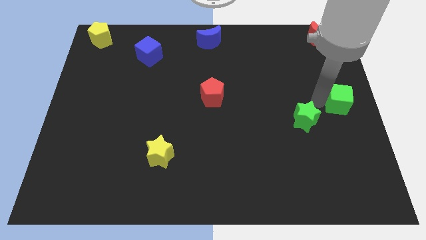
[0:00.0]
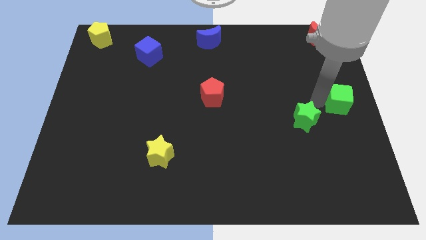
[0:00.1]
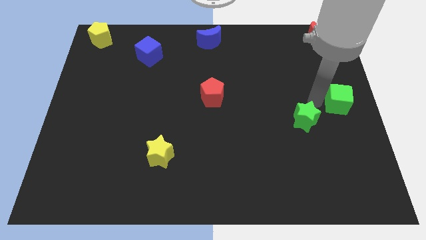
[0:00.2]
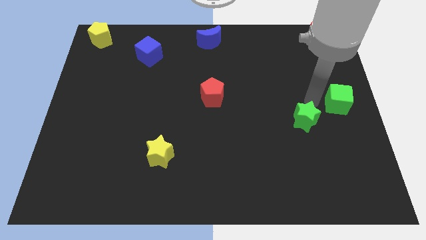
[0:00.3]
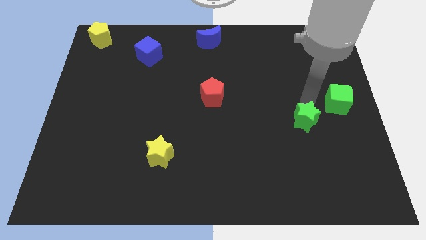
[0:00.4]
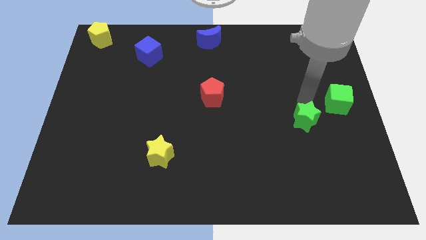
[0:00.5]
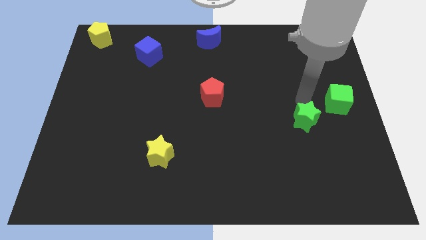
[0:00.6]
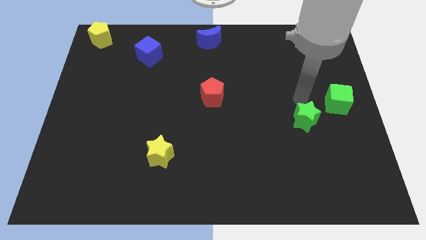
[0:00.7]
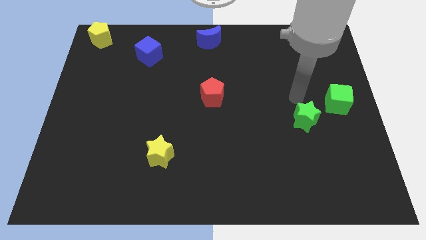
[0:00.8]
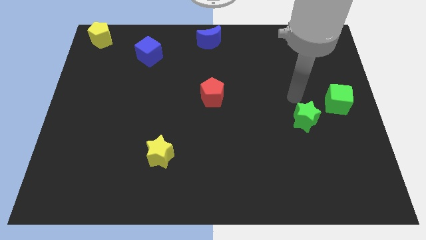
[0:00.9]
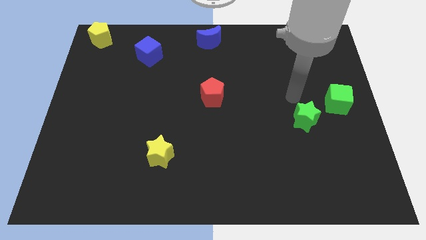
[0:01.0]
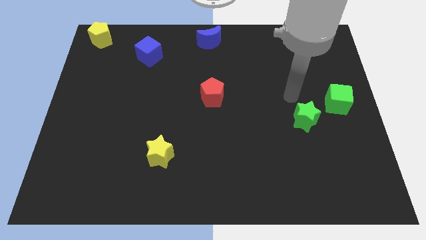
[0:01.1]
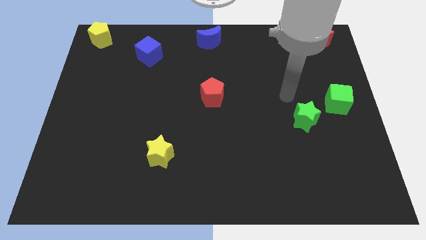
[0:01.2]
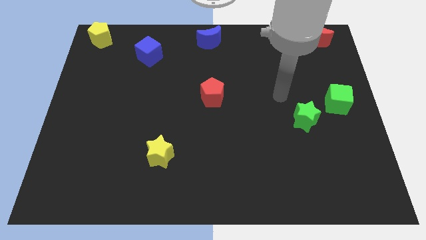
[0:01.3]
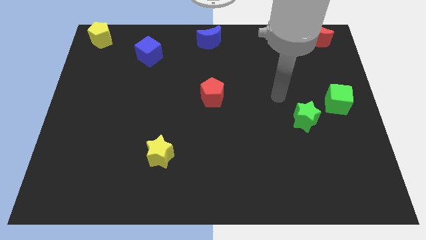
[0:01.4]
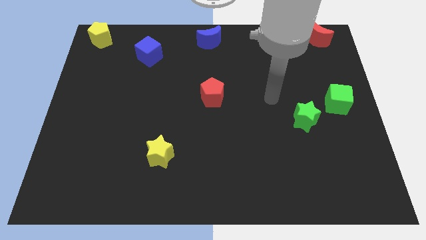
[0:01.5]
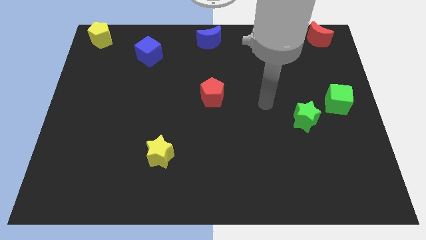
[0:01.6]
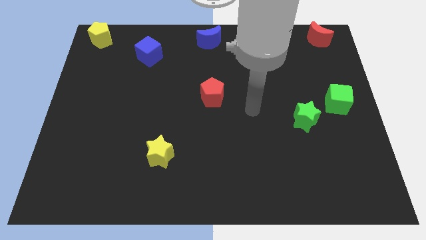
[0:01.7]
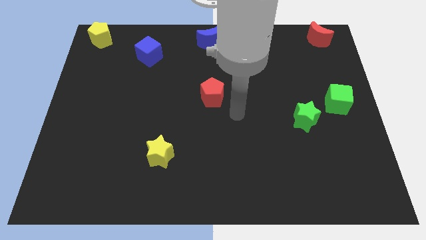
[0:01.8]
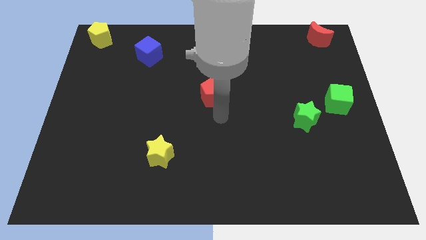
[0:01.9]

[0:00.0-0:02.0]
move your arm away from green cube

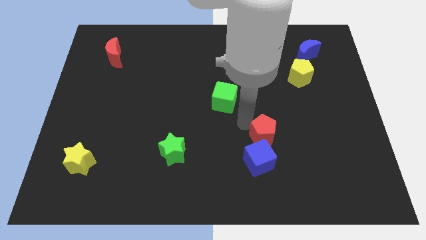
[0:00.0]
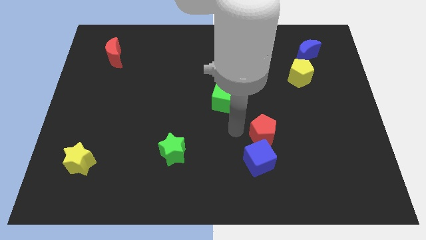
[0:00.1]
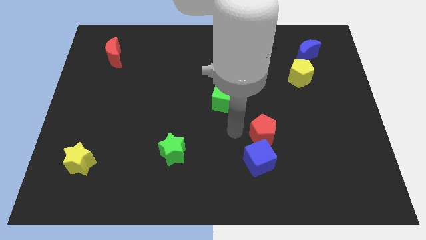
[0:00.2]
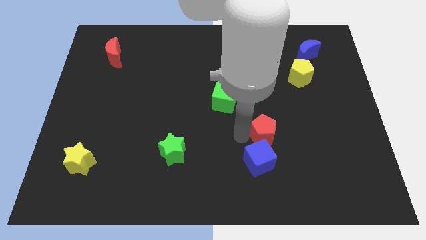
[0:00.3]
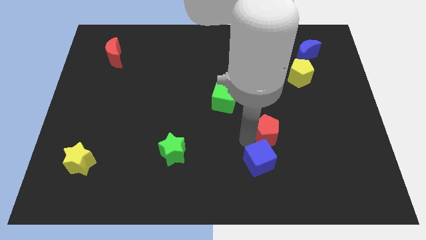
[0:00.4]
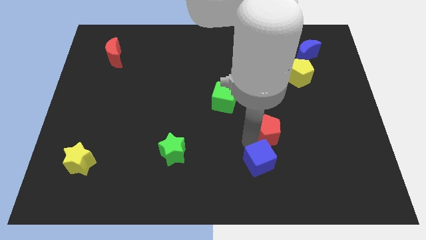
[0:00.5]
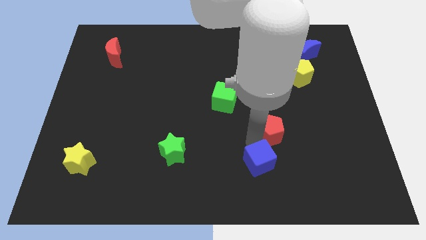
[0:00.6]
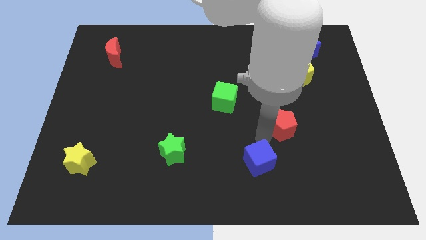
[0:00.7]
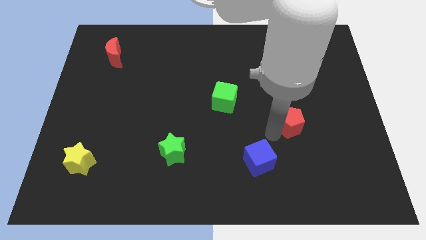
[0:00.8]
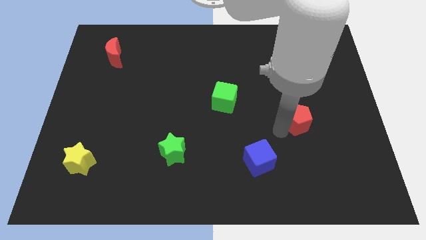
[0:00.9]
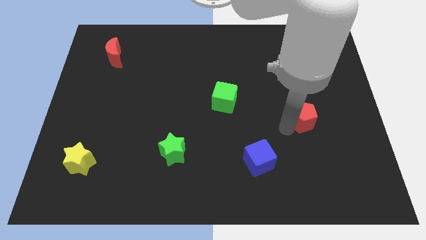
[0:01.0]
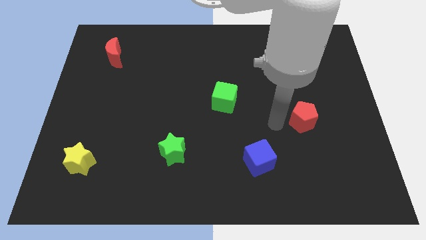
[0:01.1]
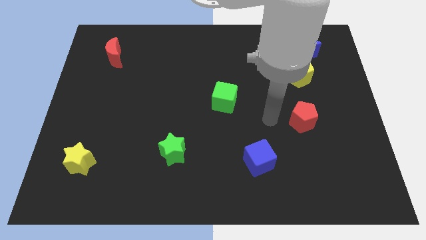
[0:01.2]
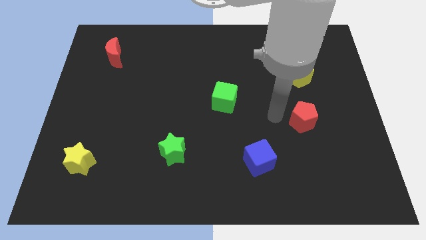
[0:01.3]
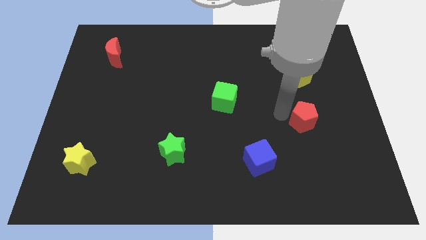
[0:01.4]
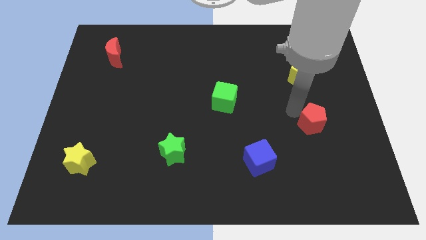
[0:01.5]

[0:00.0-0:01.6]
push the red pentagon below yellow pentagon

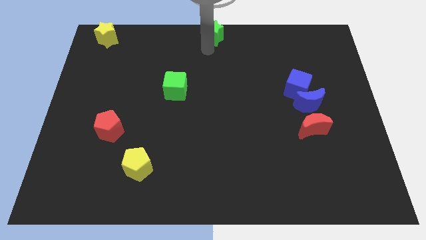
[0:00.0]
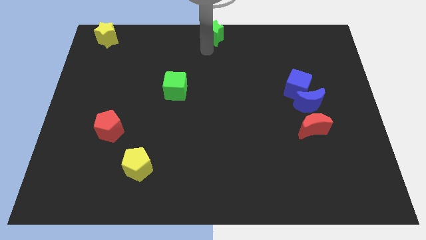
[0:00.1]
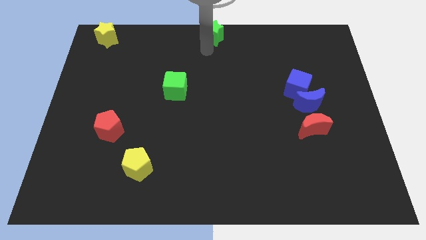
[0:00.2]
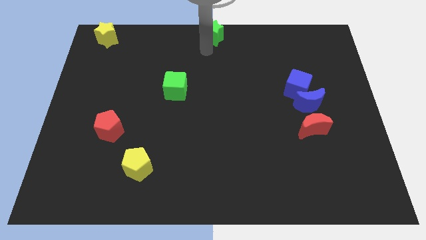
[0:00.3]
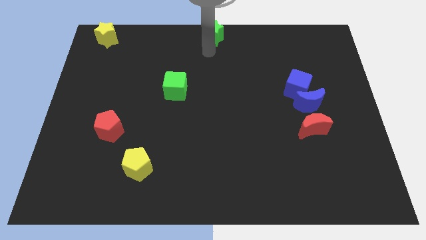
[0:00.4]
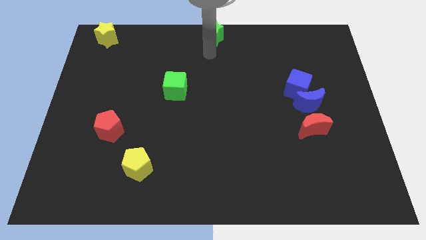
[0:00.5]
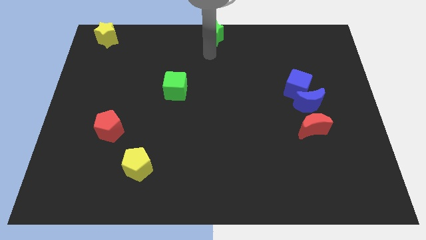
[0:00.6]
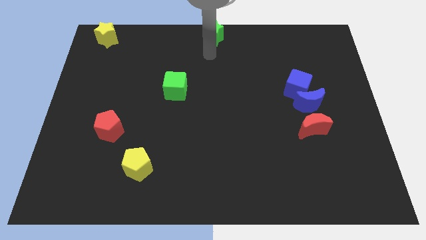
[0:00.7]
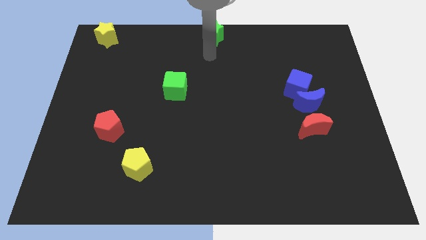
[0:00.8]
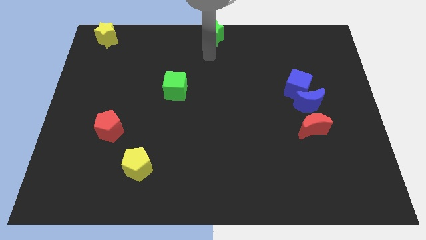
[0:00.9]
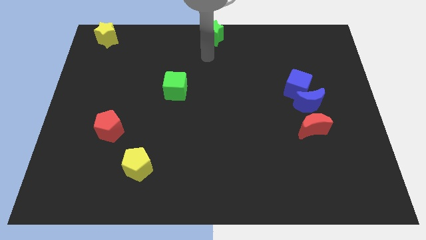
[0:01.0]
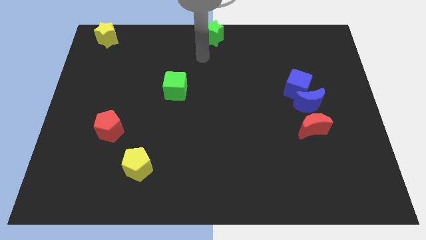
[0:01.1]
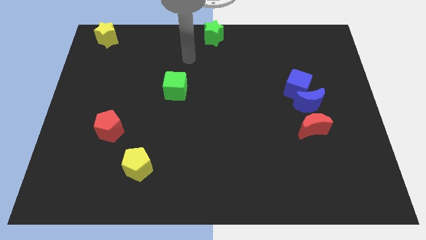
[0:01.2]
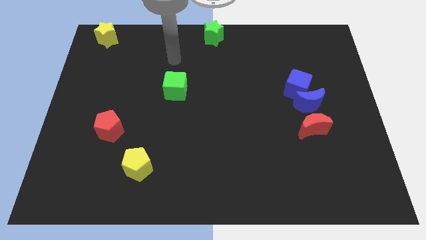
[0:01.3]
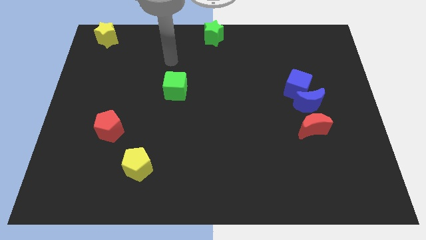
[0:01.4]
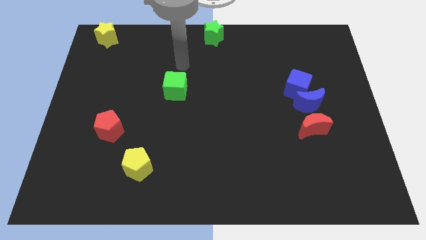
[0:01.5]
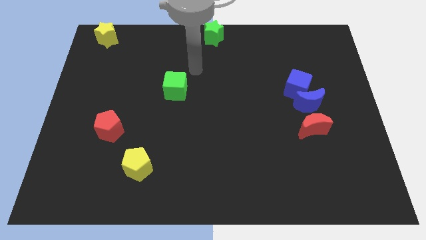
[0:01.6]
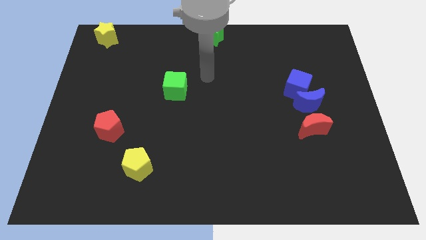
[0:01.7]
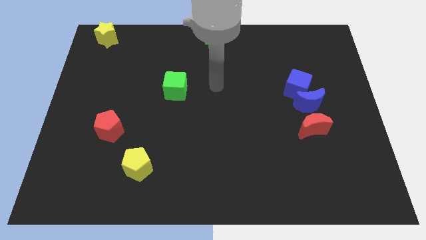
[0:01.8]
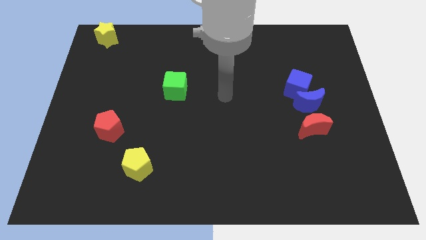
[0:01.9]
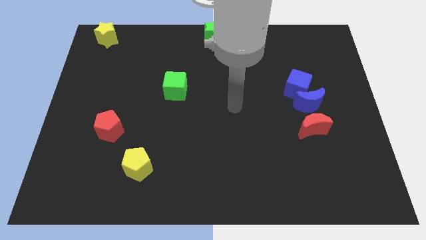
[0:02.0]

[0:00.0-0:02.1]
move your arm to the center of the board

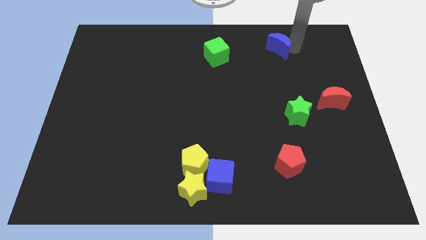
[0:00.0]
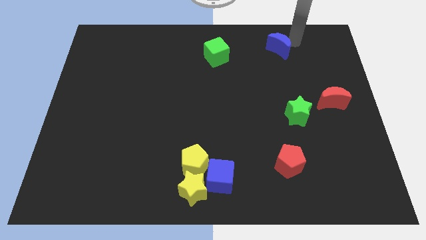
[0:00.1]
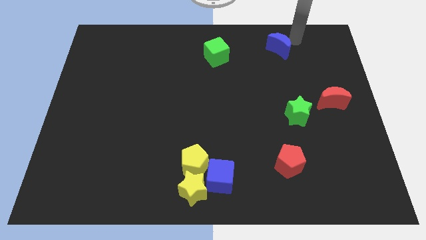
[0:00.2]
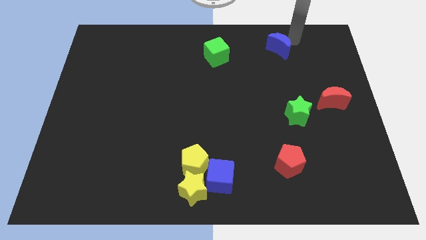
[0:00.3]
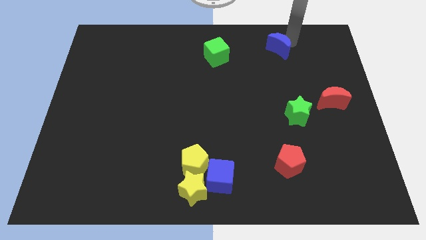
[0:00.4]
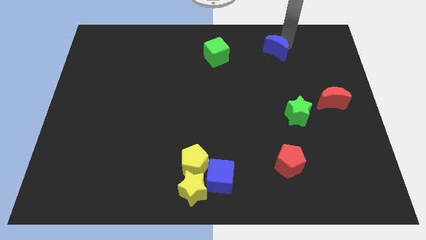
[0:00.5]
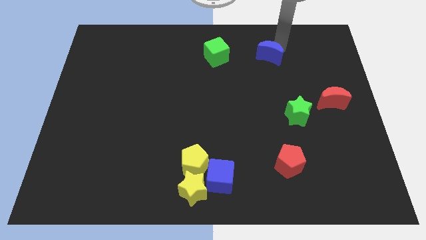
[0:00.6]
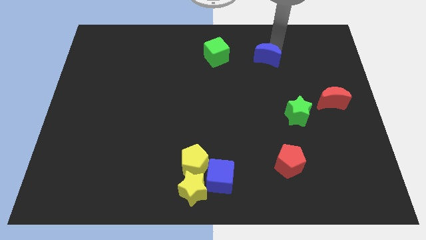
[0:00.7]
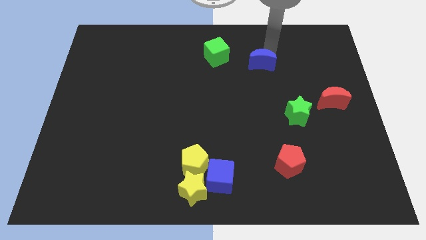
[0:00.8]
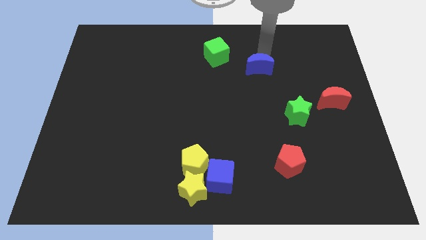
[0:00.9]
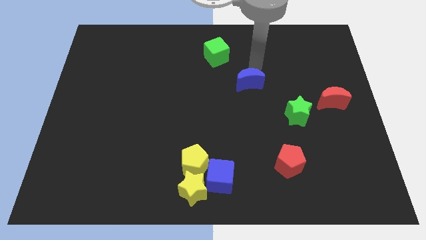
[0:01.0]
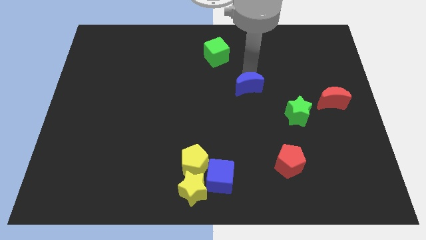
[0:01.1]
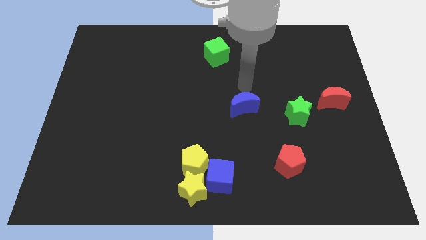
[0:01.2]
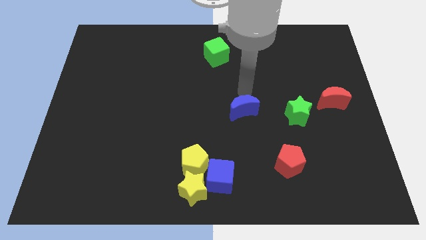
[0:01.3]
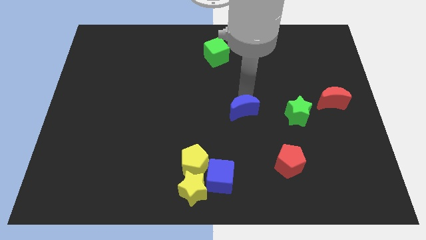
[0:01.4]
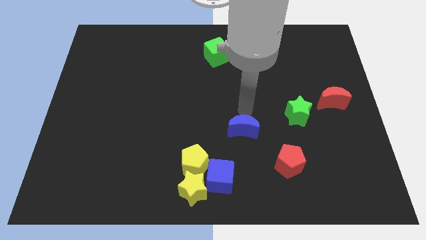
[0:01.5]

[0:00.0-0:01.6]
move the blue crescent to the bottom of the board

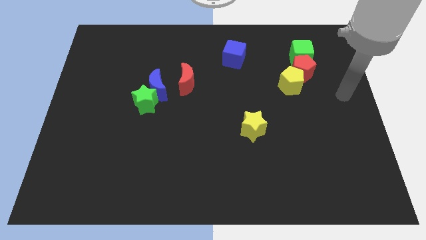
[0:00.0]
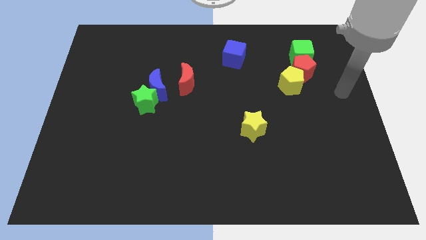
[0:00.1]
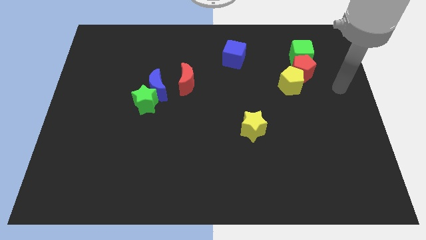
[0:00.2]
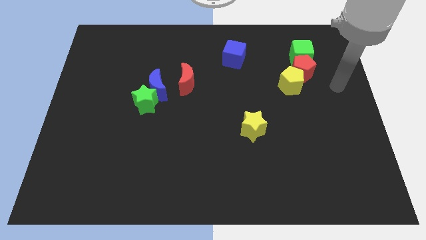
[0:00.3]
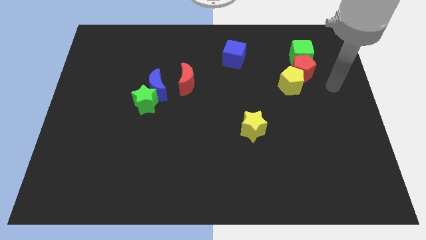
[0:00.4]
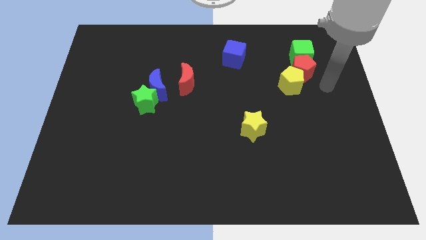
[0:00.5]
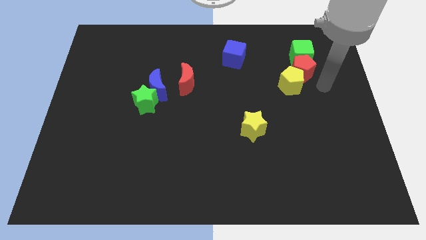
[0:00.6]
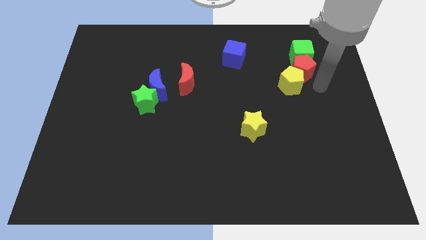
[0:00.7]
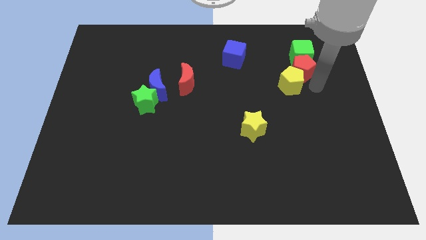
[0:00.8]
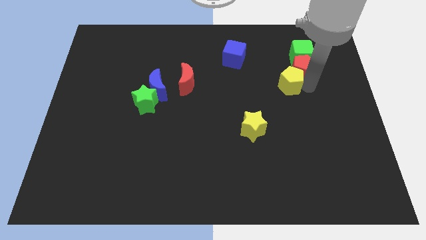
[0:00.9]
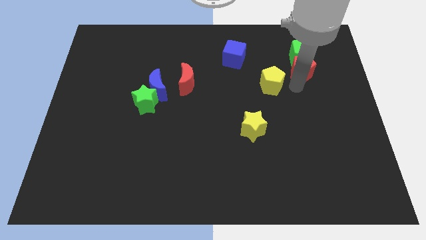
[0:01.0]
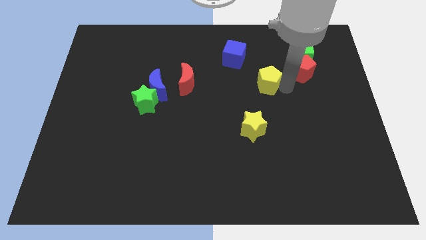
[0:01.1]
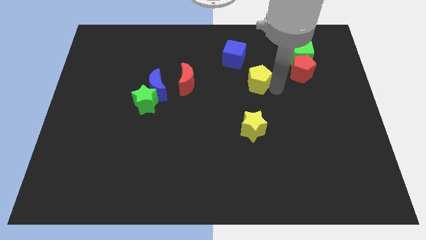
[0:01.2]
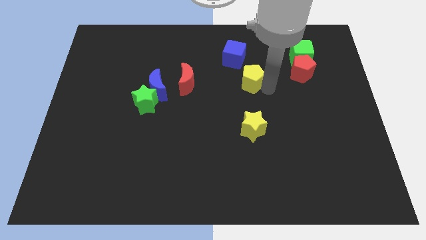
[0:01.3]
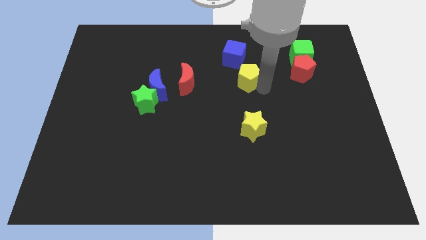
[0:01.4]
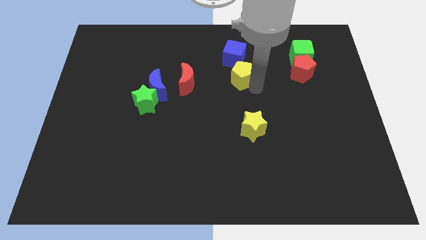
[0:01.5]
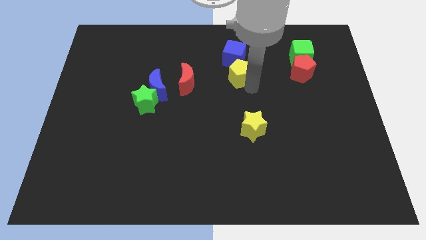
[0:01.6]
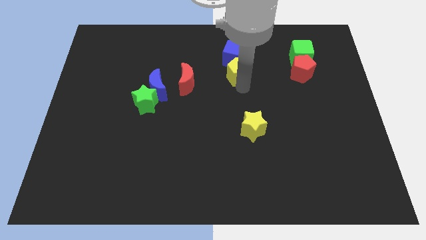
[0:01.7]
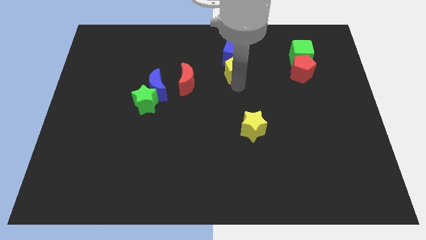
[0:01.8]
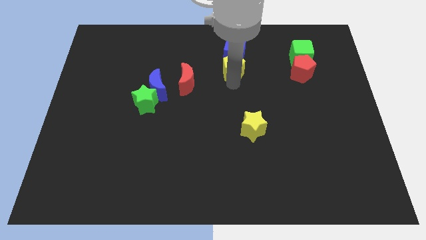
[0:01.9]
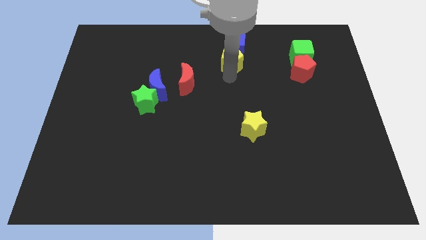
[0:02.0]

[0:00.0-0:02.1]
move yellow pentagon below the blue cube
